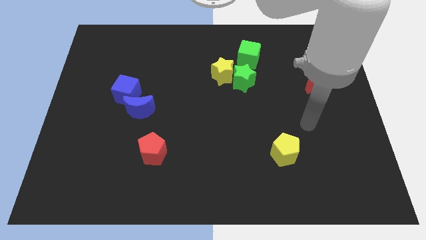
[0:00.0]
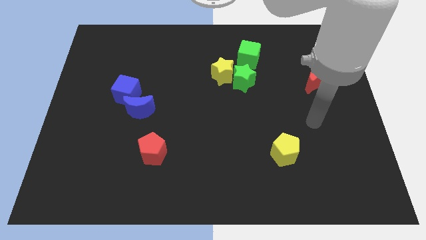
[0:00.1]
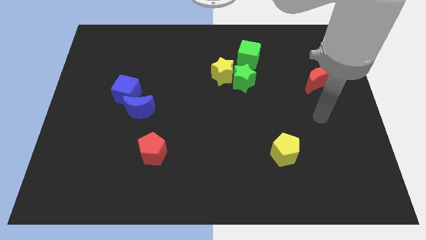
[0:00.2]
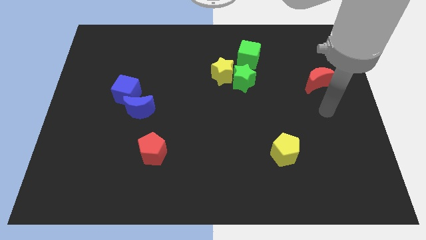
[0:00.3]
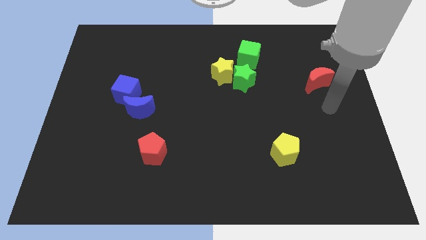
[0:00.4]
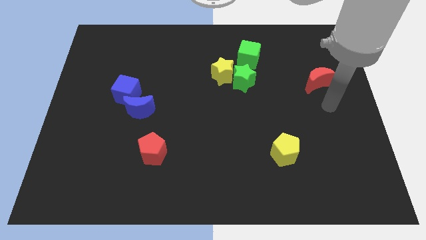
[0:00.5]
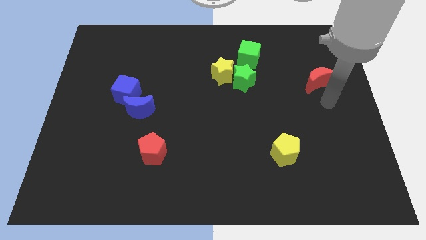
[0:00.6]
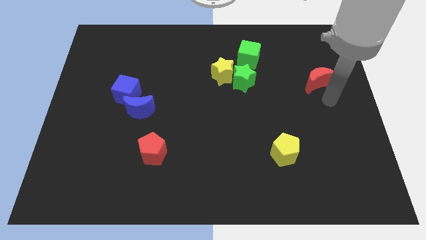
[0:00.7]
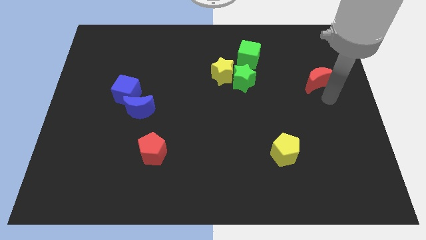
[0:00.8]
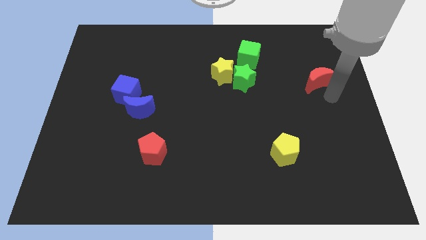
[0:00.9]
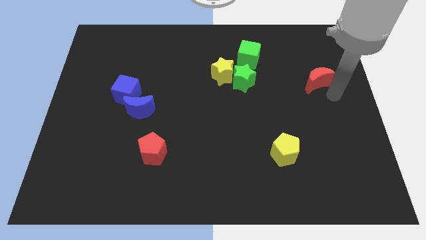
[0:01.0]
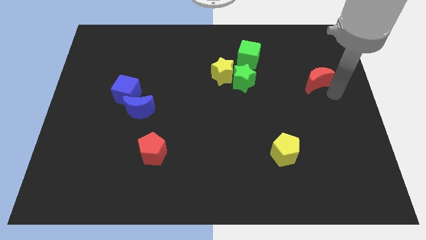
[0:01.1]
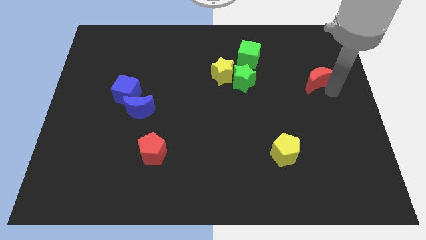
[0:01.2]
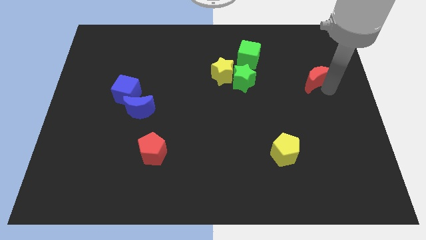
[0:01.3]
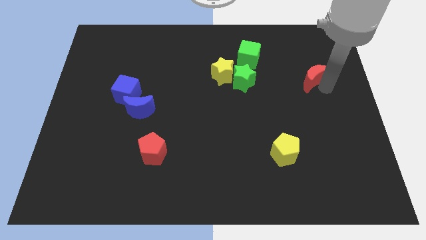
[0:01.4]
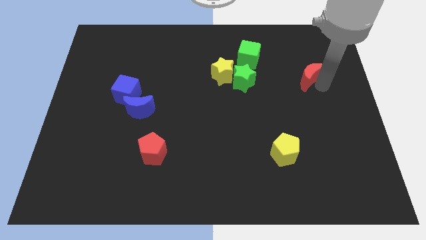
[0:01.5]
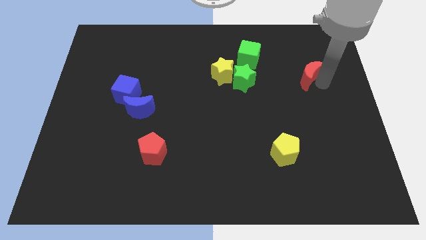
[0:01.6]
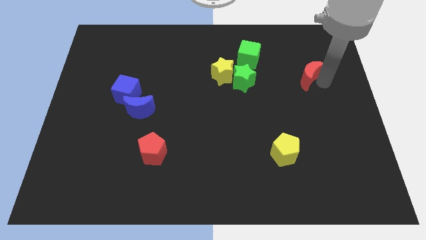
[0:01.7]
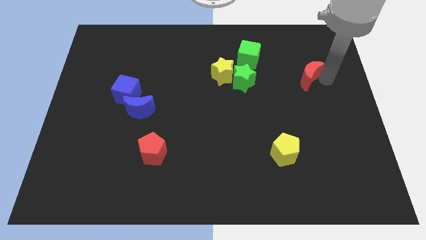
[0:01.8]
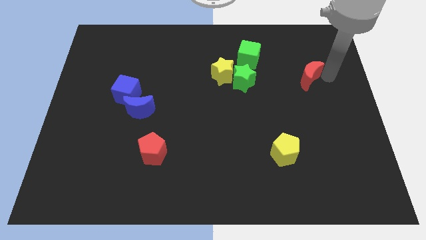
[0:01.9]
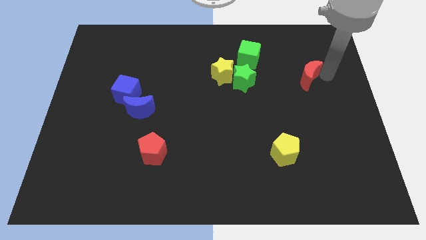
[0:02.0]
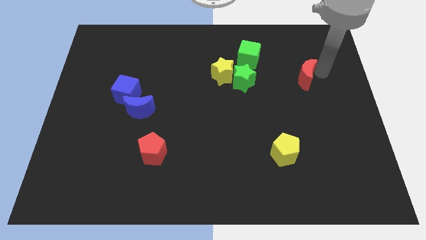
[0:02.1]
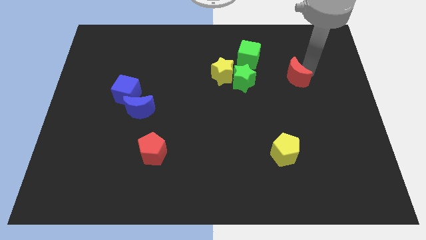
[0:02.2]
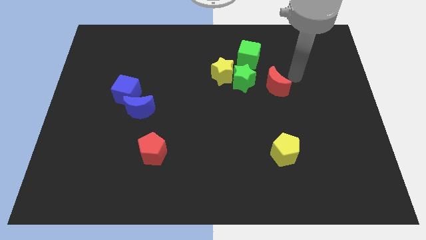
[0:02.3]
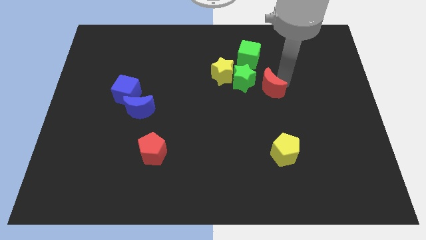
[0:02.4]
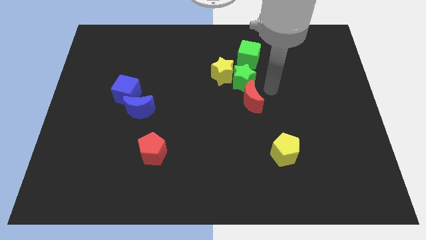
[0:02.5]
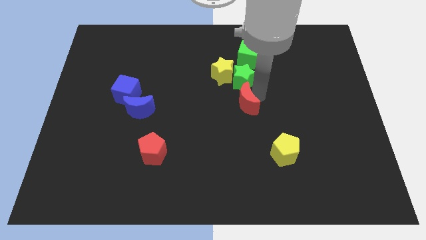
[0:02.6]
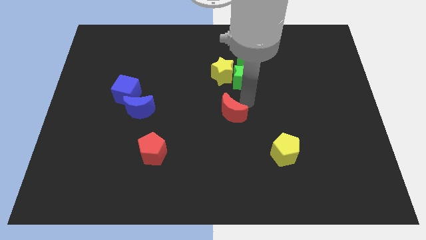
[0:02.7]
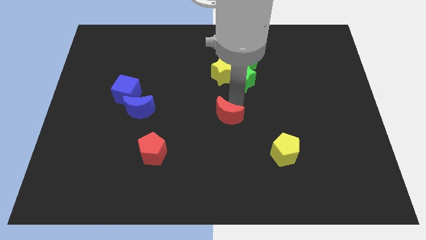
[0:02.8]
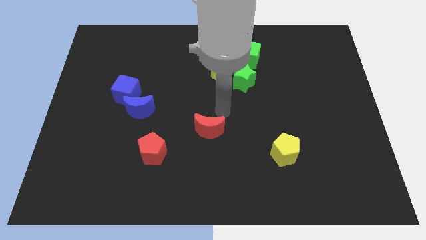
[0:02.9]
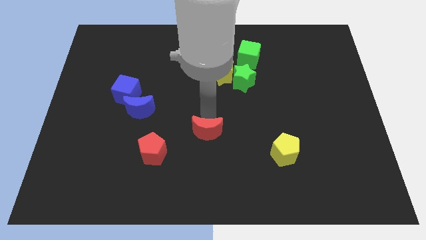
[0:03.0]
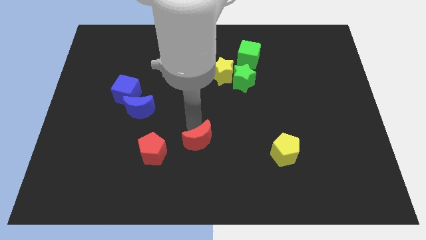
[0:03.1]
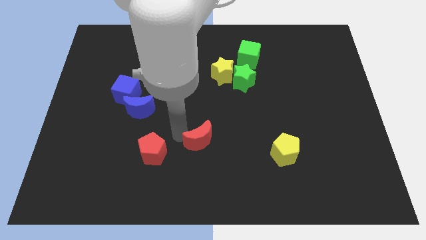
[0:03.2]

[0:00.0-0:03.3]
place the red crescent at the top right side of red pentagon

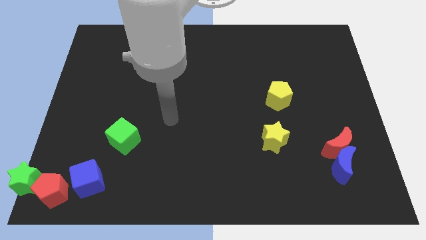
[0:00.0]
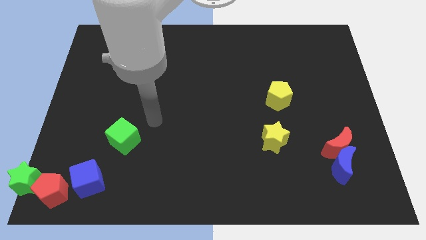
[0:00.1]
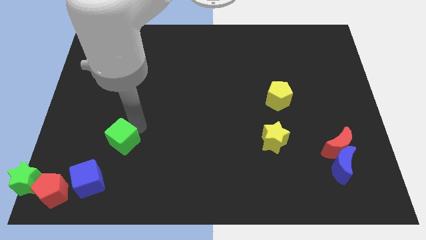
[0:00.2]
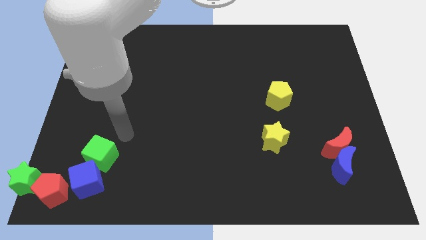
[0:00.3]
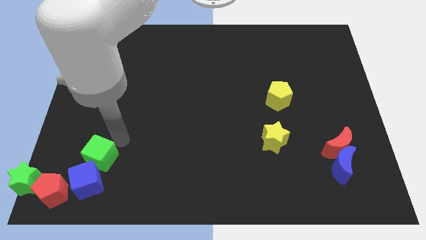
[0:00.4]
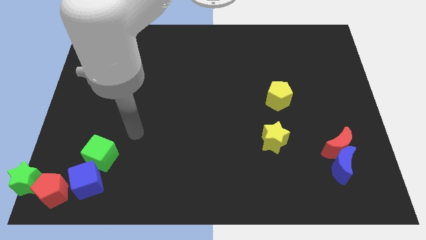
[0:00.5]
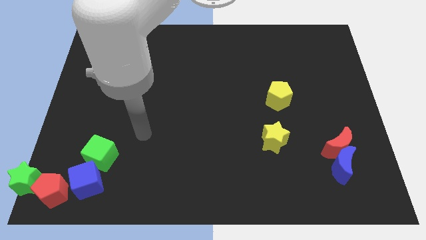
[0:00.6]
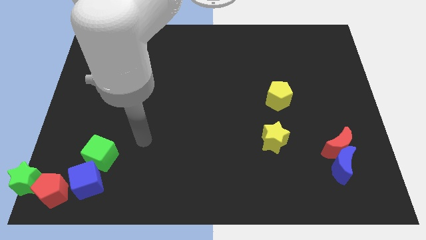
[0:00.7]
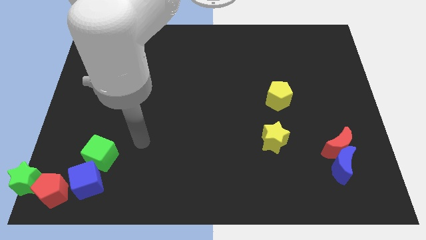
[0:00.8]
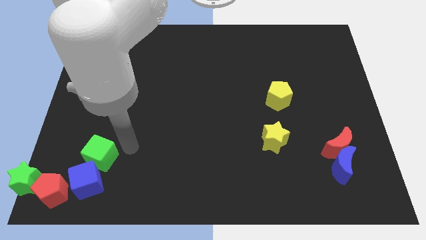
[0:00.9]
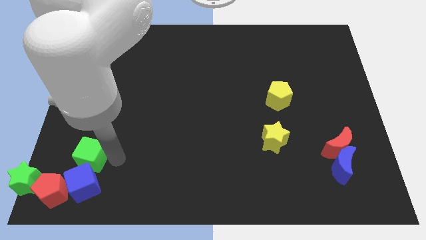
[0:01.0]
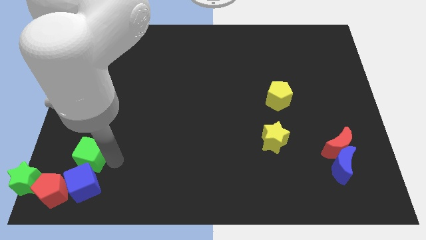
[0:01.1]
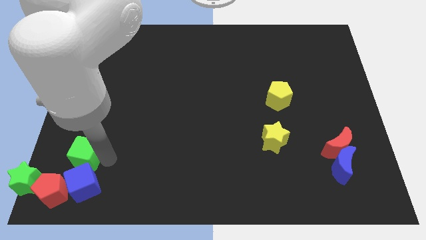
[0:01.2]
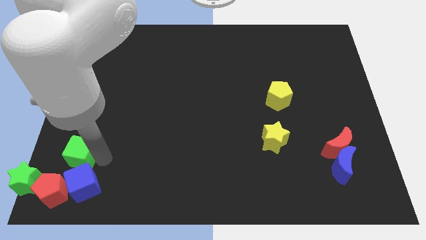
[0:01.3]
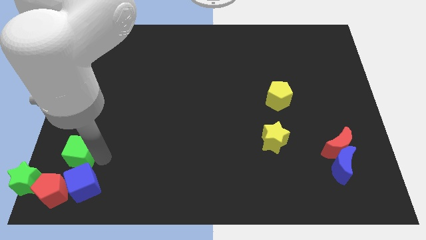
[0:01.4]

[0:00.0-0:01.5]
drag the green cube into the blue cube

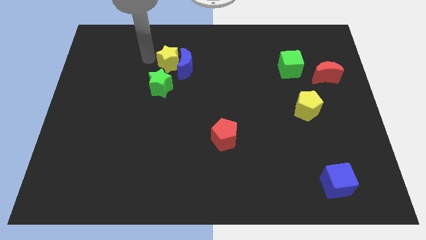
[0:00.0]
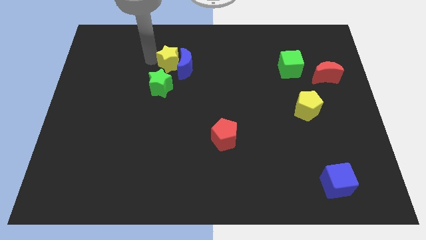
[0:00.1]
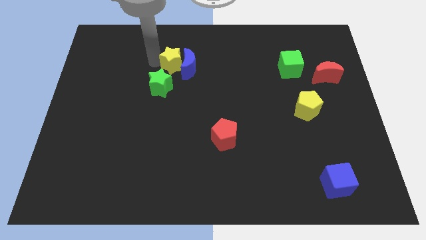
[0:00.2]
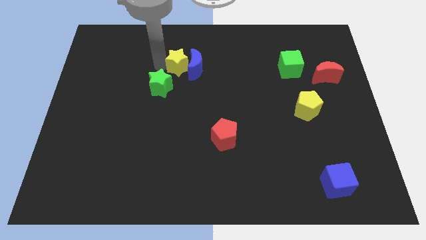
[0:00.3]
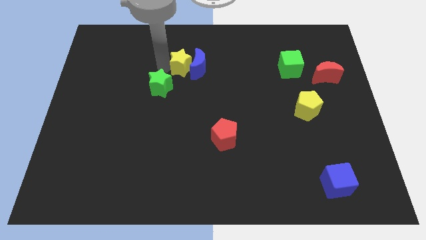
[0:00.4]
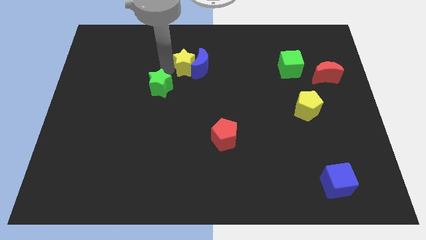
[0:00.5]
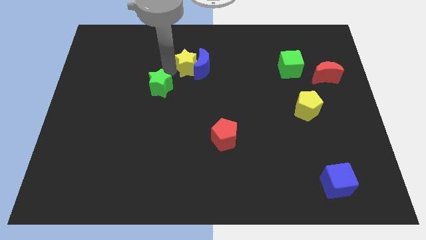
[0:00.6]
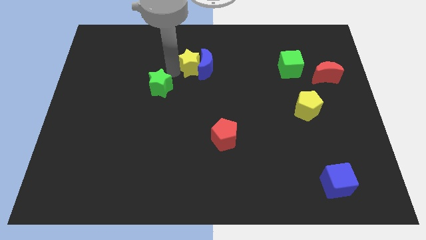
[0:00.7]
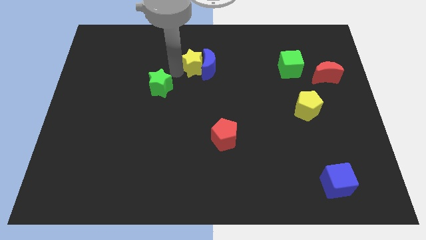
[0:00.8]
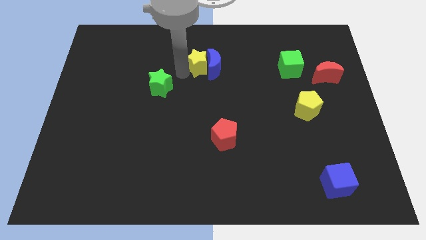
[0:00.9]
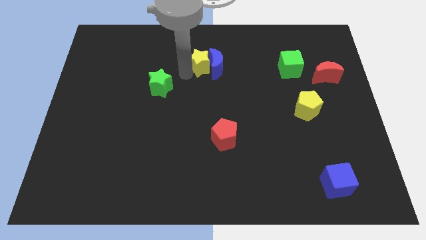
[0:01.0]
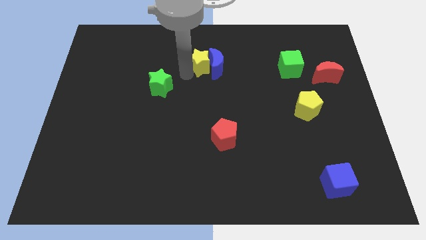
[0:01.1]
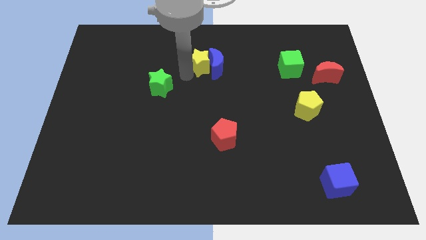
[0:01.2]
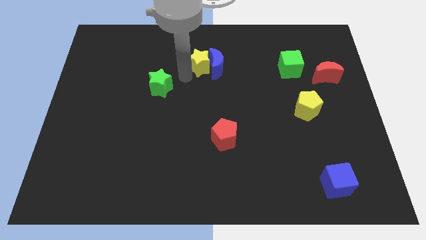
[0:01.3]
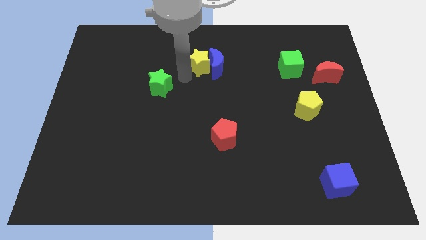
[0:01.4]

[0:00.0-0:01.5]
push the yellow star with blue crescent to the center of the board

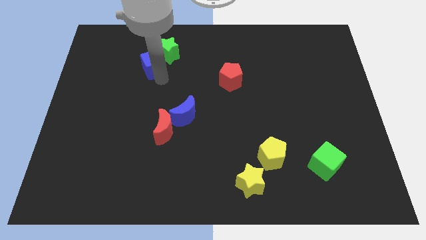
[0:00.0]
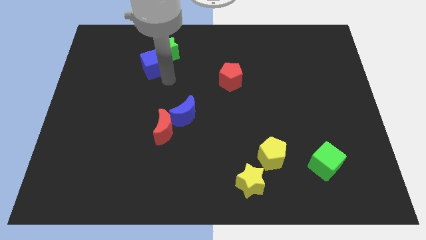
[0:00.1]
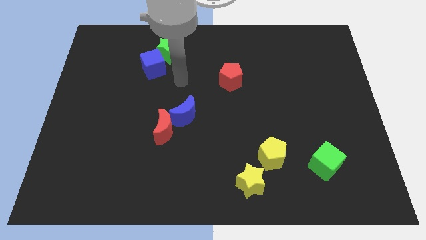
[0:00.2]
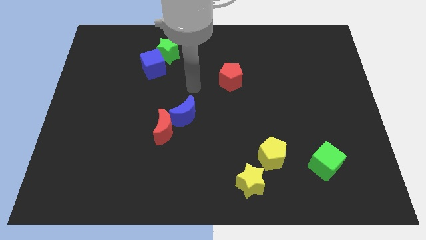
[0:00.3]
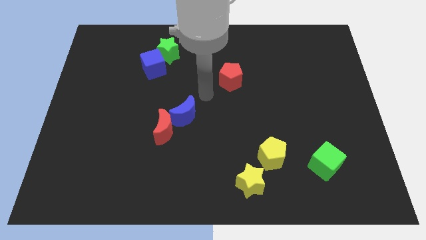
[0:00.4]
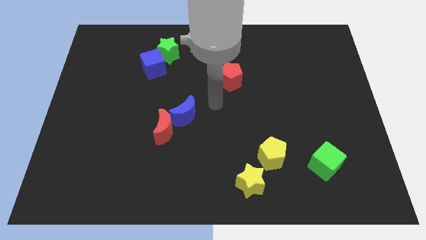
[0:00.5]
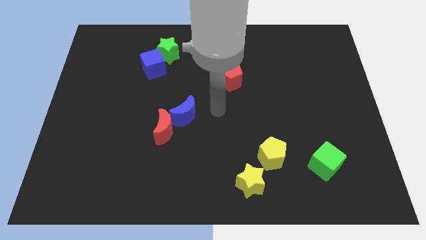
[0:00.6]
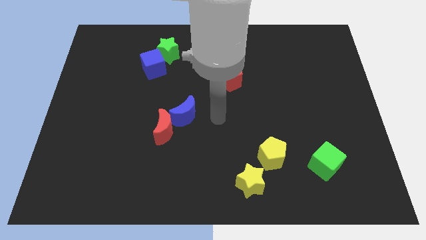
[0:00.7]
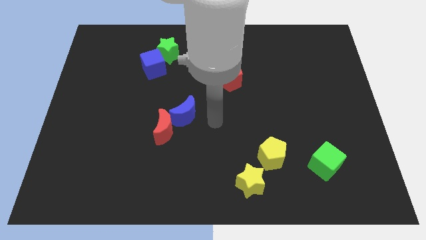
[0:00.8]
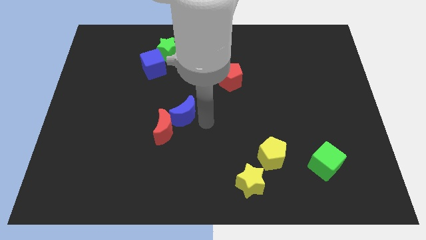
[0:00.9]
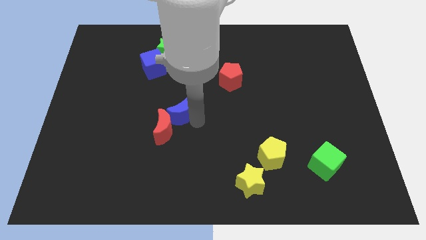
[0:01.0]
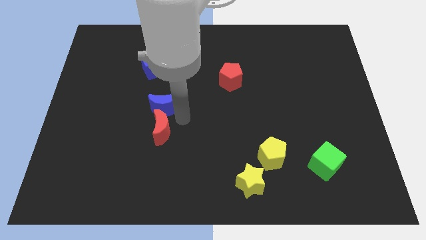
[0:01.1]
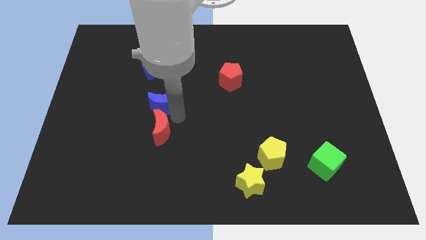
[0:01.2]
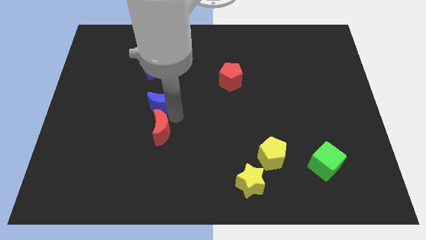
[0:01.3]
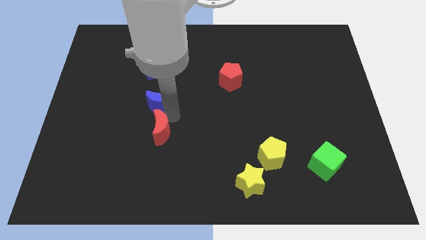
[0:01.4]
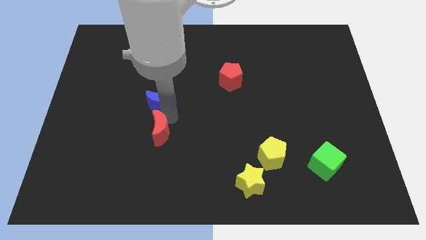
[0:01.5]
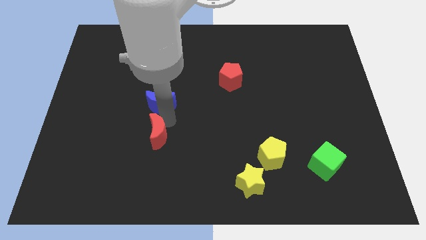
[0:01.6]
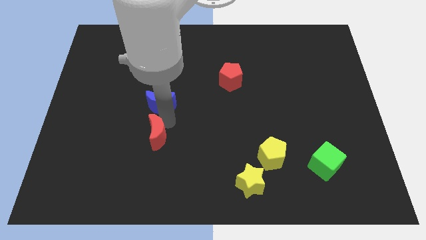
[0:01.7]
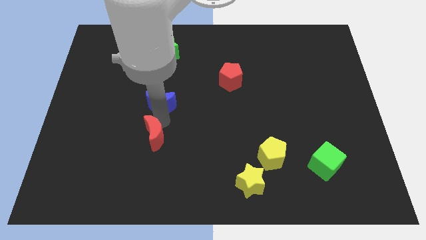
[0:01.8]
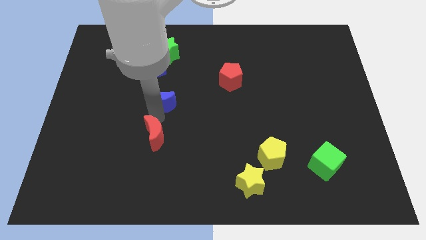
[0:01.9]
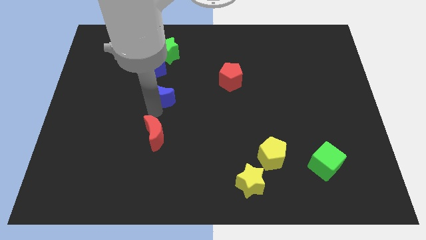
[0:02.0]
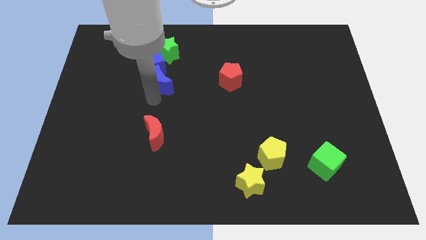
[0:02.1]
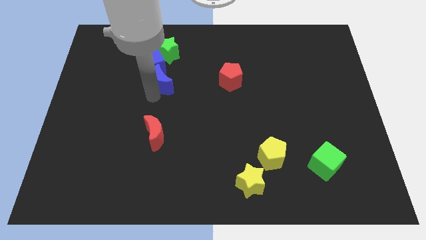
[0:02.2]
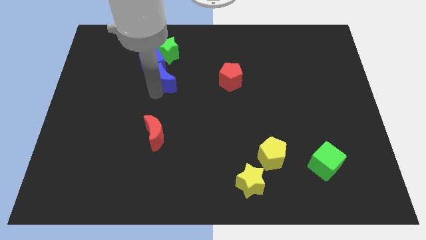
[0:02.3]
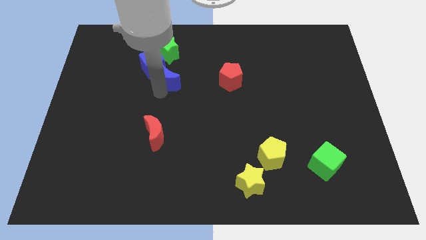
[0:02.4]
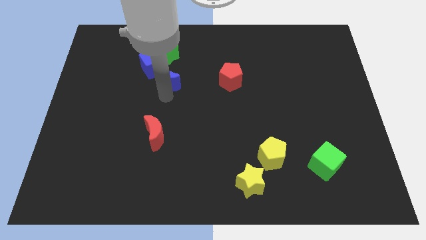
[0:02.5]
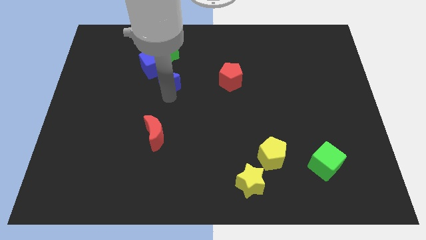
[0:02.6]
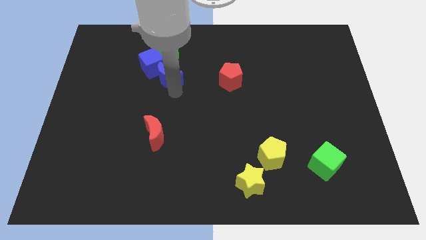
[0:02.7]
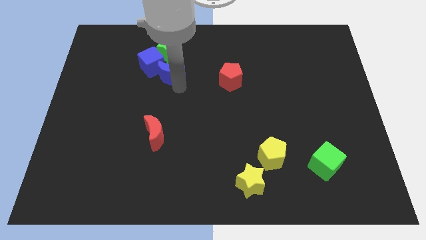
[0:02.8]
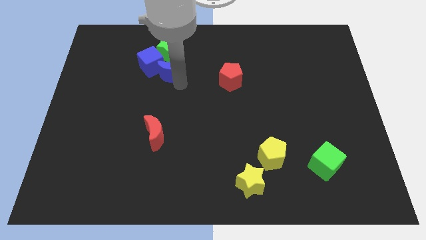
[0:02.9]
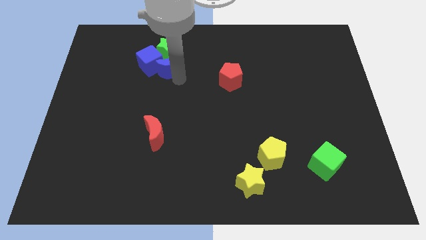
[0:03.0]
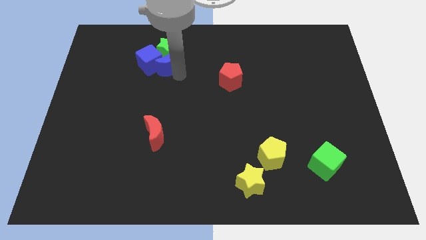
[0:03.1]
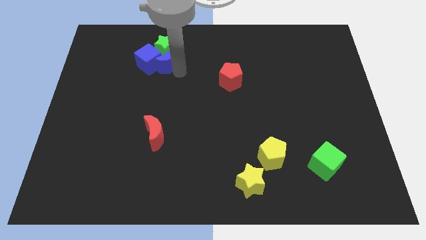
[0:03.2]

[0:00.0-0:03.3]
move the blue crescent towards the blue cube
